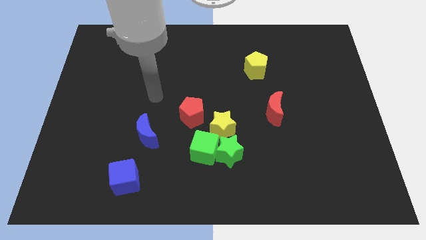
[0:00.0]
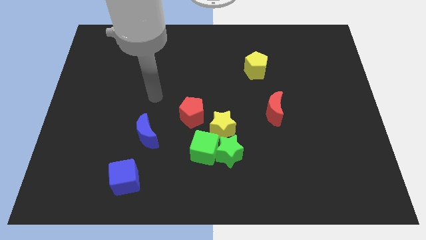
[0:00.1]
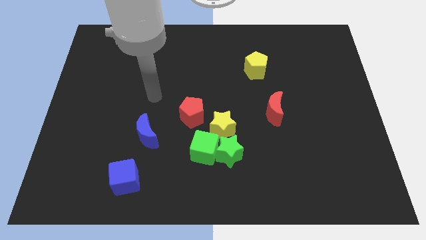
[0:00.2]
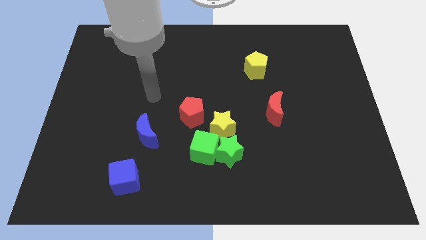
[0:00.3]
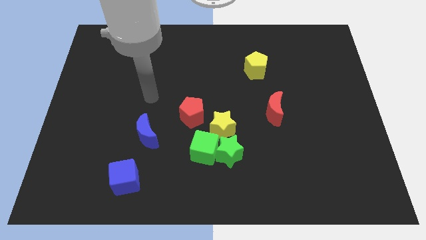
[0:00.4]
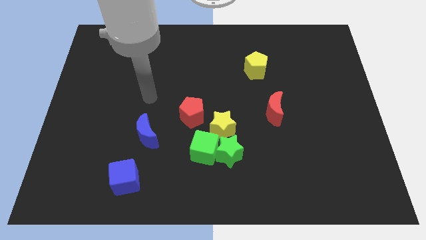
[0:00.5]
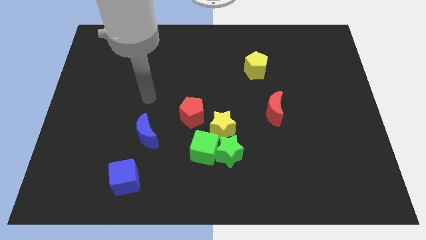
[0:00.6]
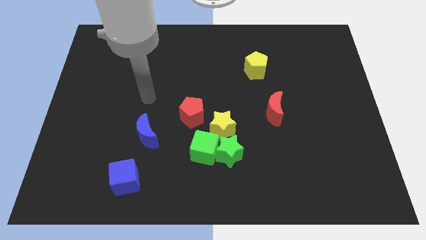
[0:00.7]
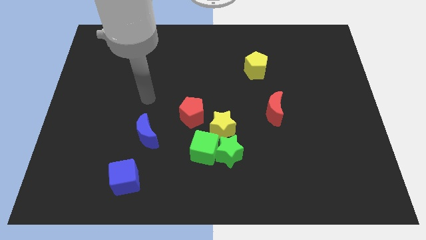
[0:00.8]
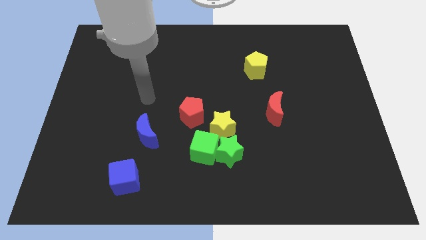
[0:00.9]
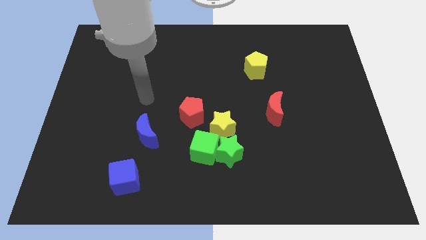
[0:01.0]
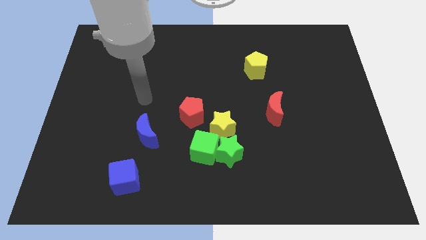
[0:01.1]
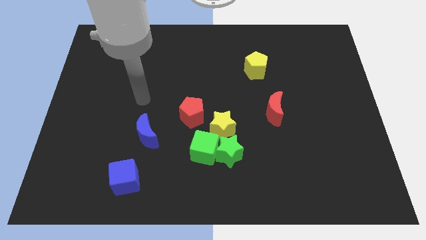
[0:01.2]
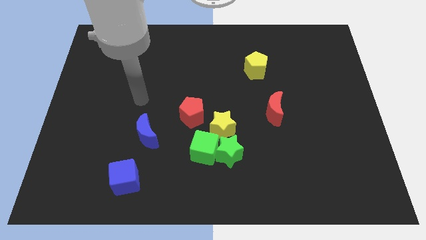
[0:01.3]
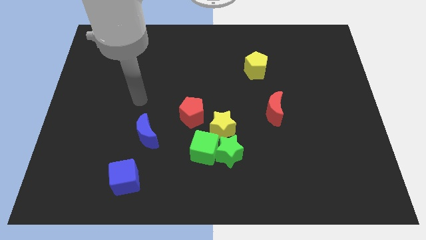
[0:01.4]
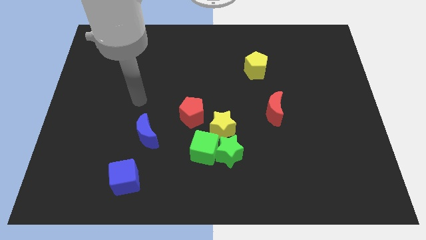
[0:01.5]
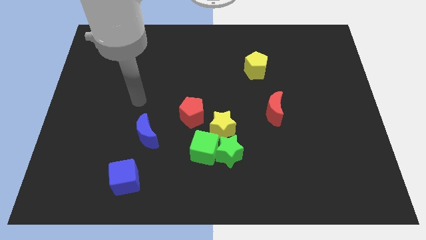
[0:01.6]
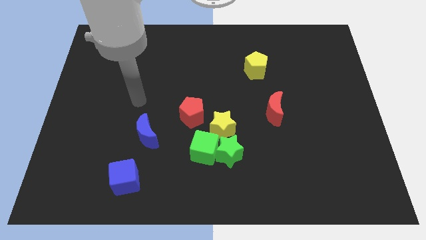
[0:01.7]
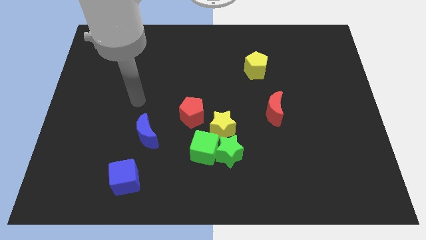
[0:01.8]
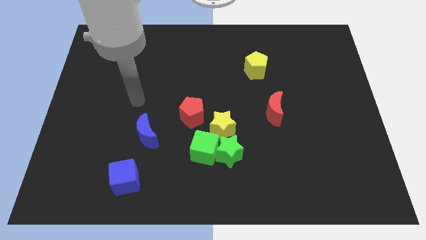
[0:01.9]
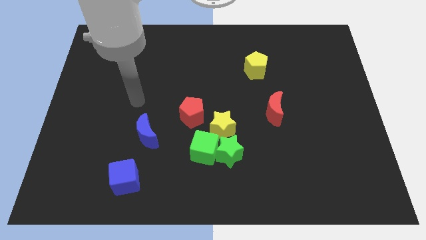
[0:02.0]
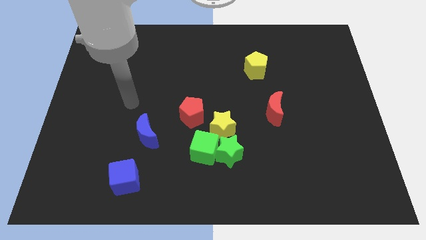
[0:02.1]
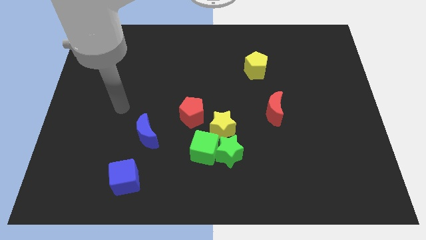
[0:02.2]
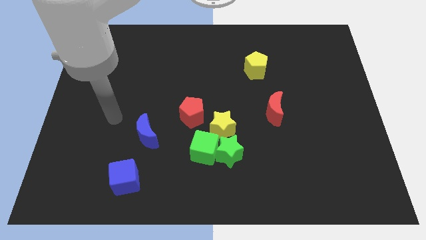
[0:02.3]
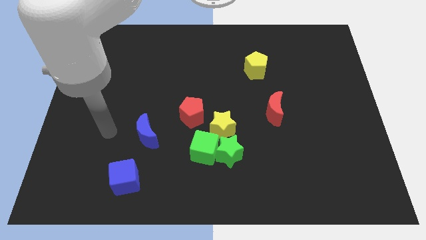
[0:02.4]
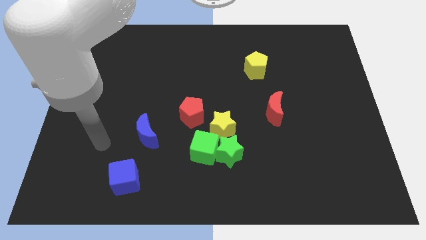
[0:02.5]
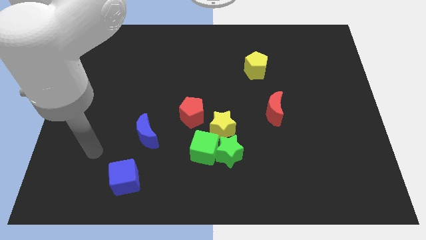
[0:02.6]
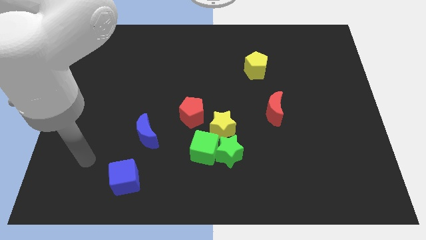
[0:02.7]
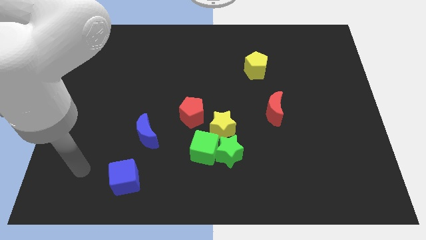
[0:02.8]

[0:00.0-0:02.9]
move the arm towards the blue cube

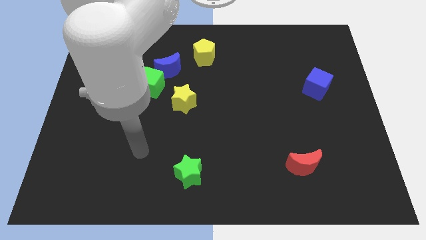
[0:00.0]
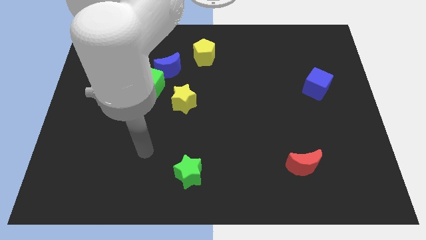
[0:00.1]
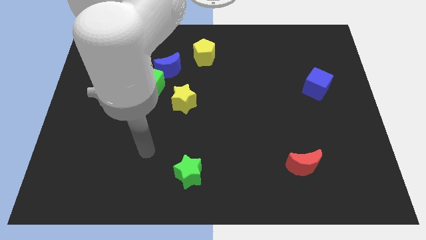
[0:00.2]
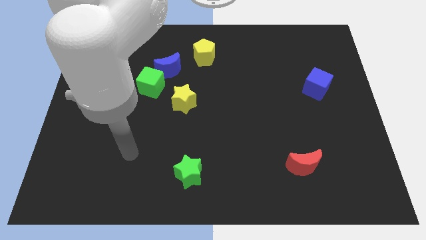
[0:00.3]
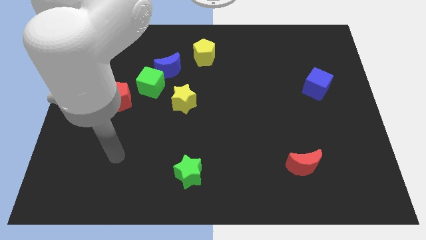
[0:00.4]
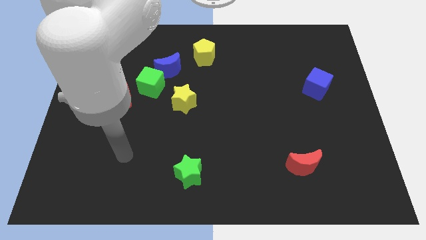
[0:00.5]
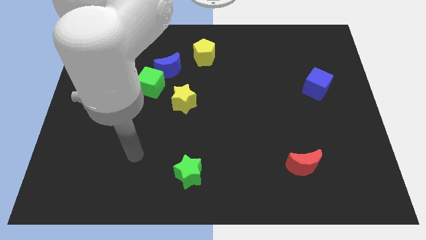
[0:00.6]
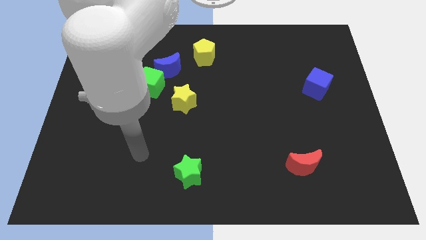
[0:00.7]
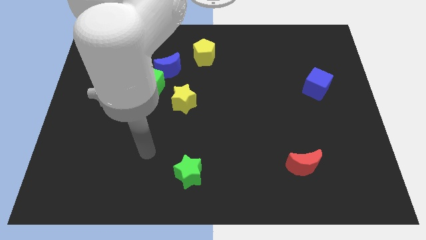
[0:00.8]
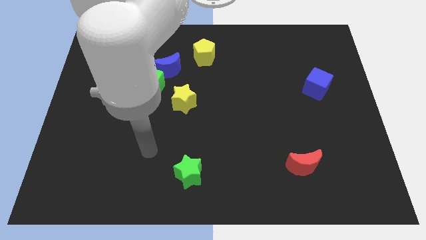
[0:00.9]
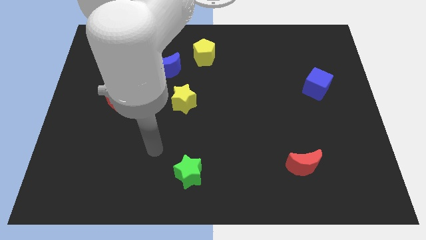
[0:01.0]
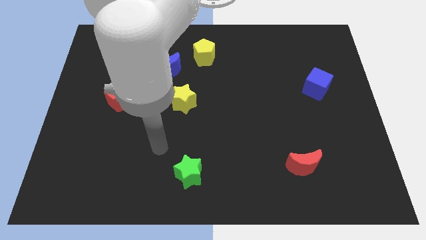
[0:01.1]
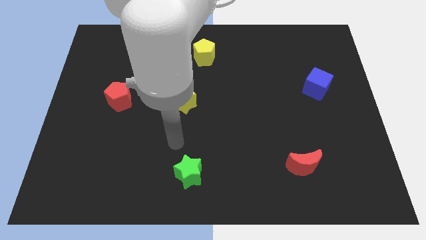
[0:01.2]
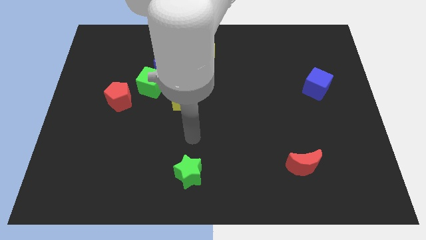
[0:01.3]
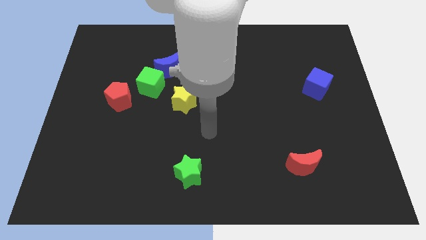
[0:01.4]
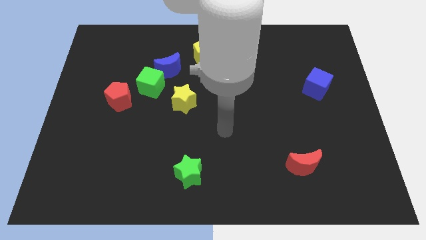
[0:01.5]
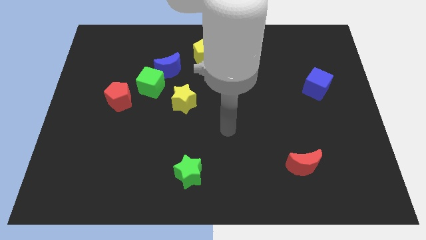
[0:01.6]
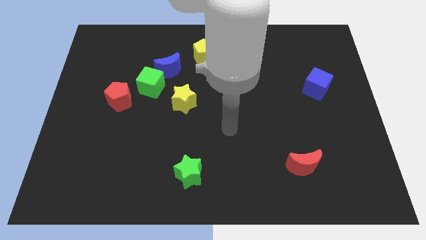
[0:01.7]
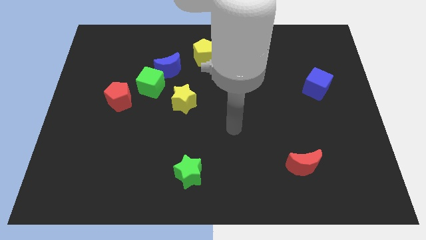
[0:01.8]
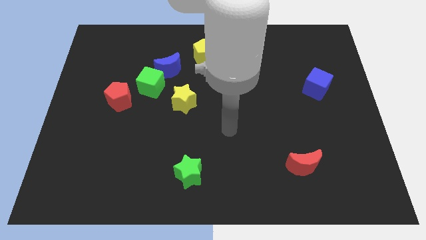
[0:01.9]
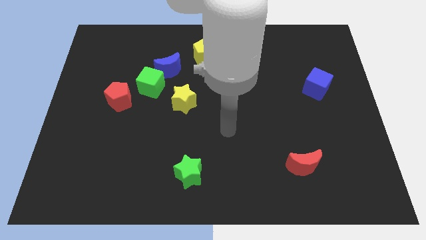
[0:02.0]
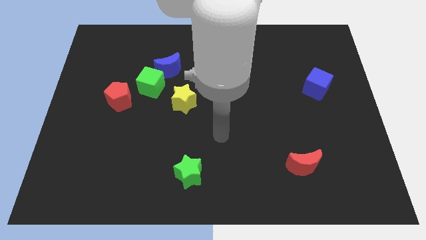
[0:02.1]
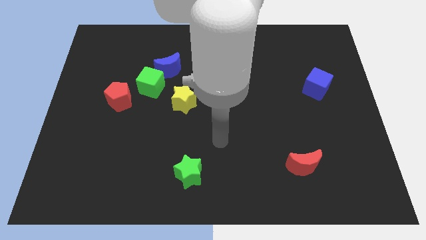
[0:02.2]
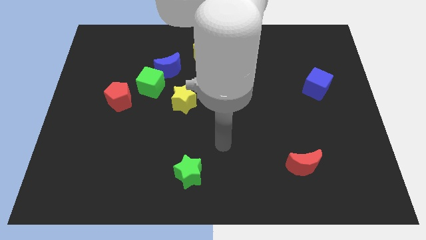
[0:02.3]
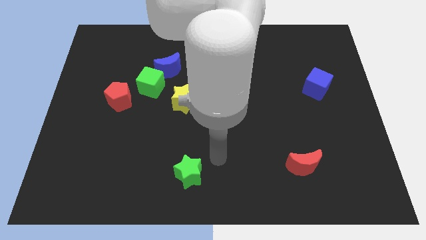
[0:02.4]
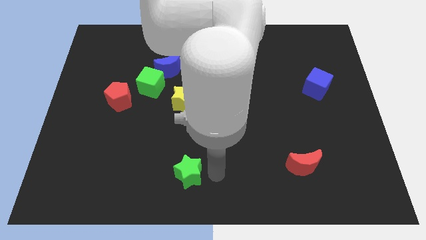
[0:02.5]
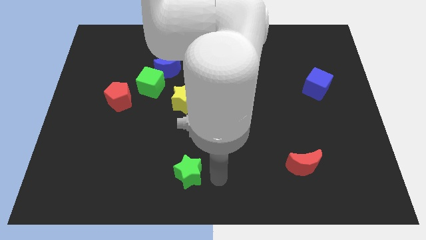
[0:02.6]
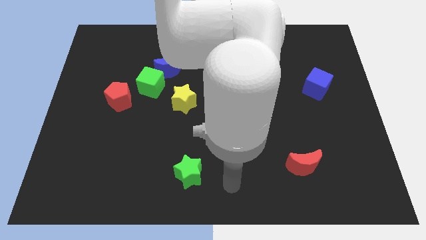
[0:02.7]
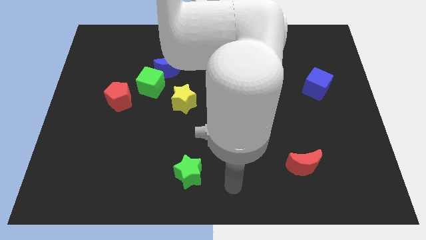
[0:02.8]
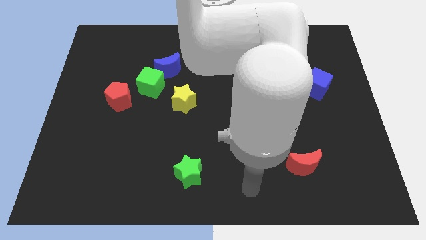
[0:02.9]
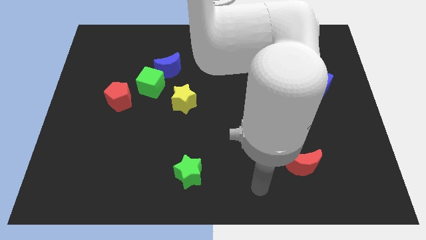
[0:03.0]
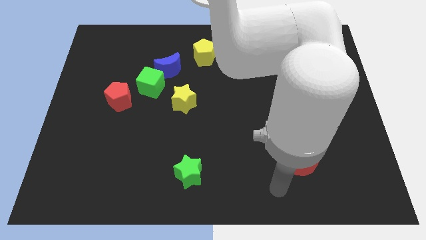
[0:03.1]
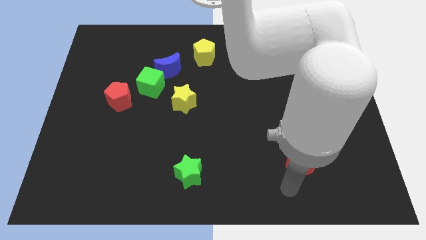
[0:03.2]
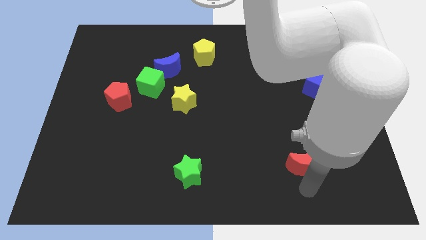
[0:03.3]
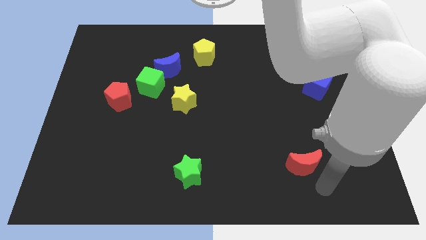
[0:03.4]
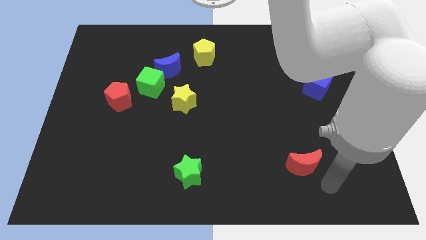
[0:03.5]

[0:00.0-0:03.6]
move arm to the red moon

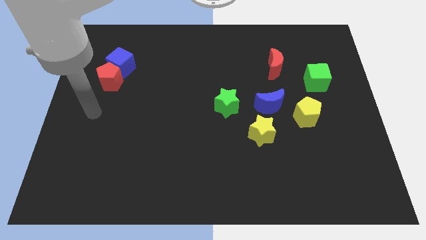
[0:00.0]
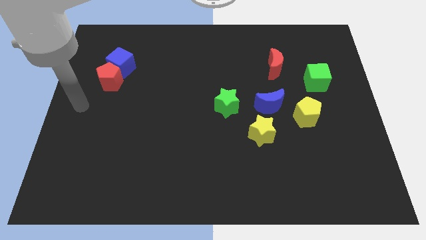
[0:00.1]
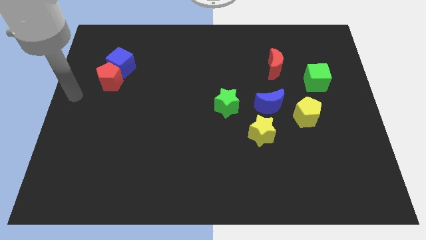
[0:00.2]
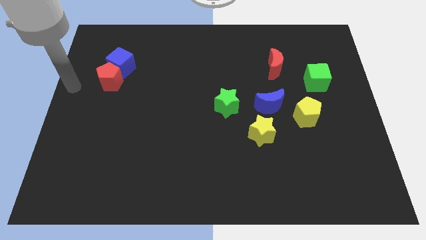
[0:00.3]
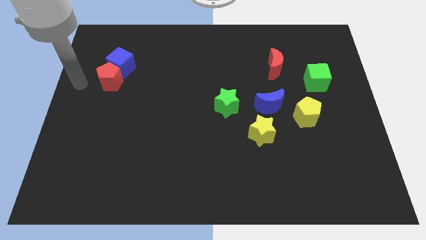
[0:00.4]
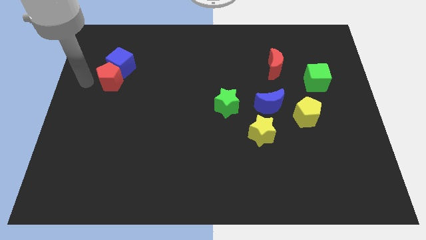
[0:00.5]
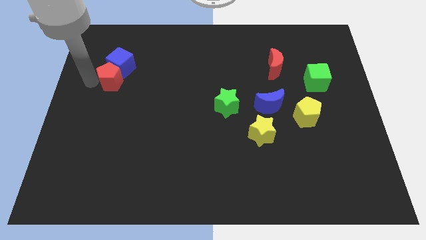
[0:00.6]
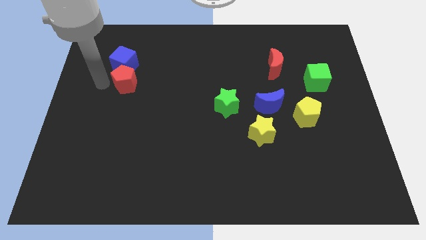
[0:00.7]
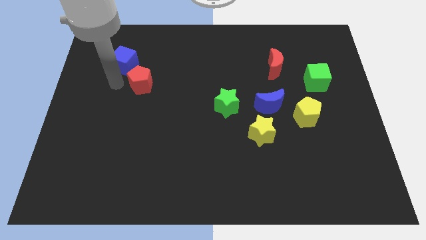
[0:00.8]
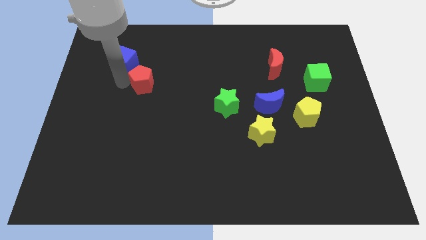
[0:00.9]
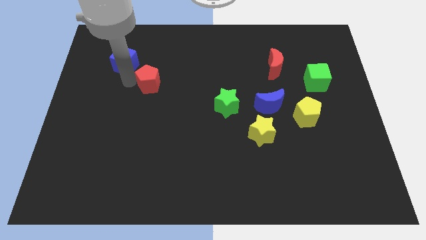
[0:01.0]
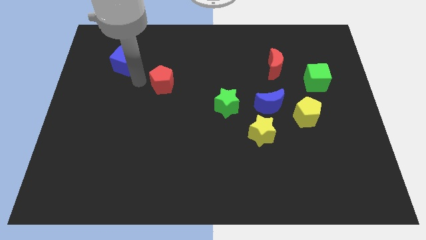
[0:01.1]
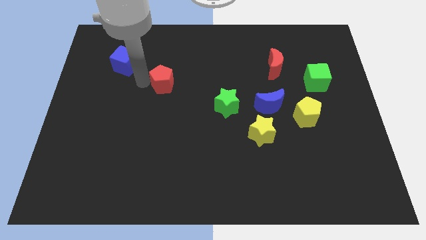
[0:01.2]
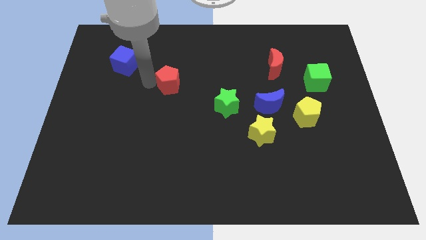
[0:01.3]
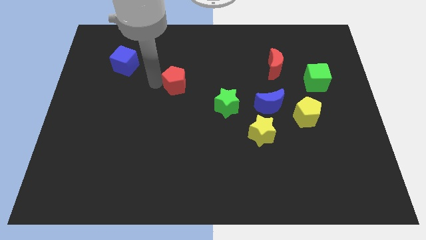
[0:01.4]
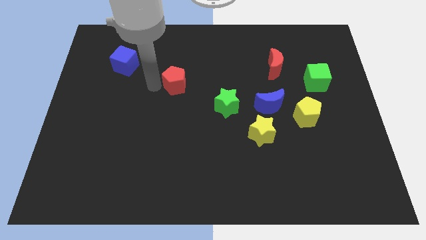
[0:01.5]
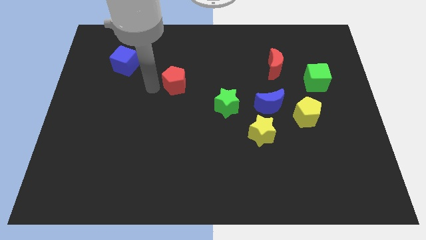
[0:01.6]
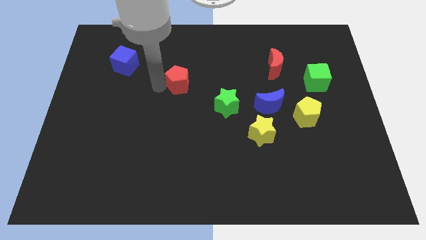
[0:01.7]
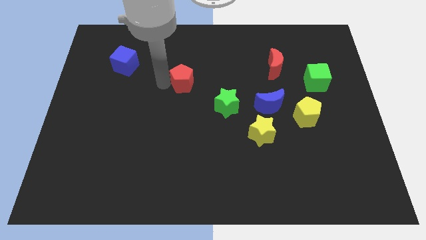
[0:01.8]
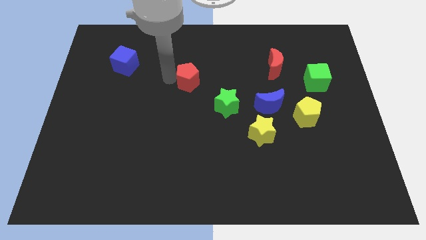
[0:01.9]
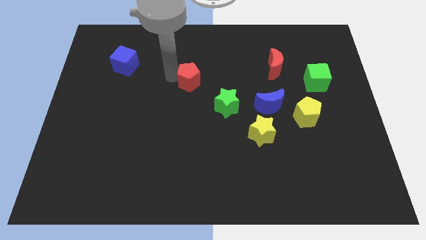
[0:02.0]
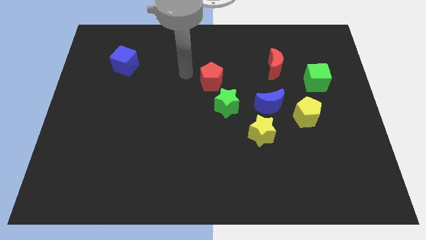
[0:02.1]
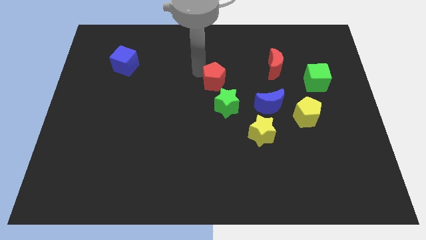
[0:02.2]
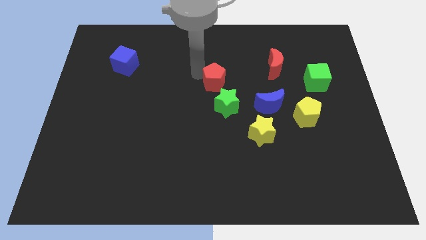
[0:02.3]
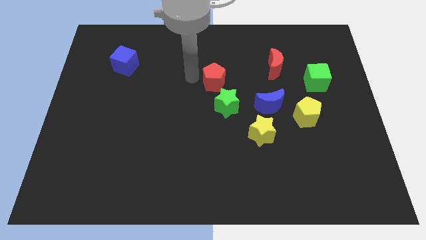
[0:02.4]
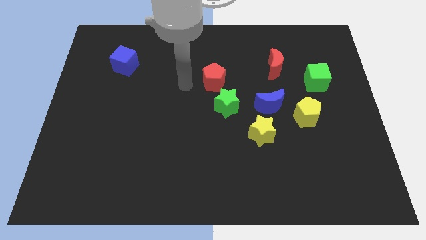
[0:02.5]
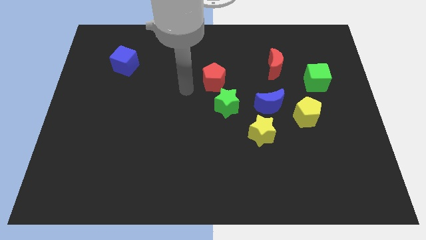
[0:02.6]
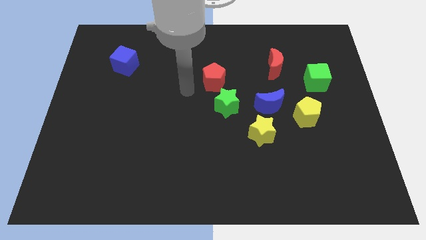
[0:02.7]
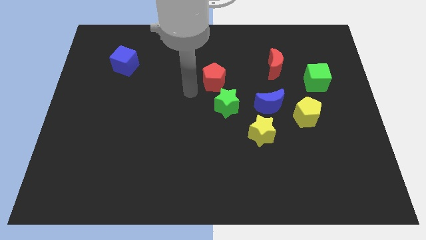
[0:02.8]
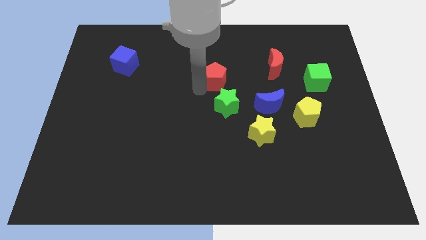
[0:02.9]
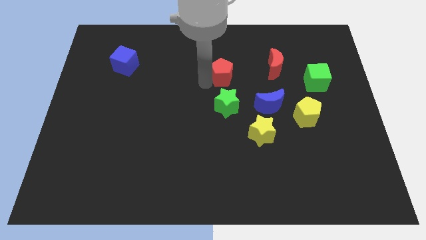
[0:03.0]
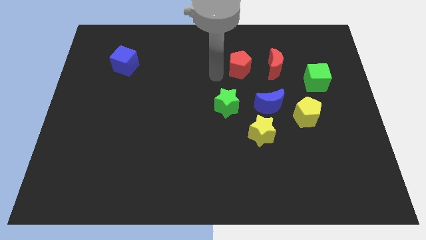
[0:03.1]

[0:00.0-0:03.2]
push red pentagon above green star
